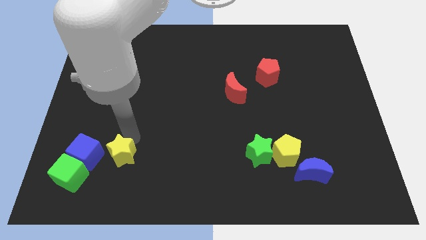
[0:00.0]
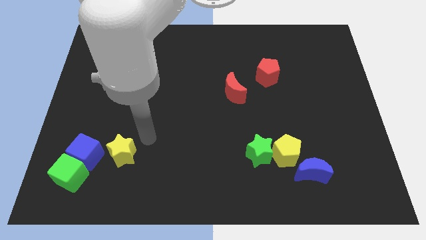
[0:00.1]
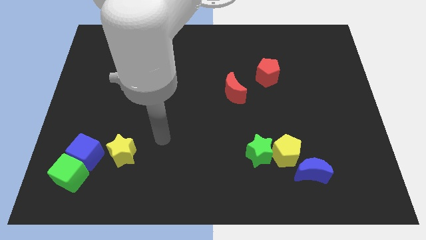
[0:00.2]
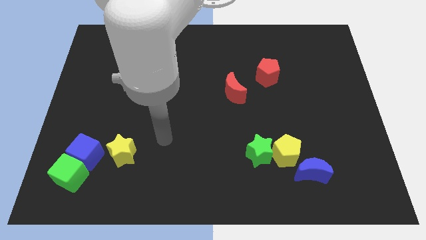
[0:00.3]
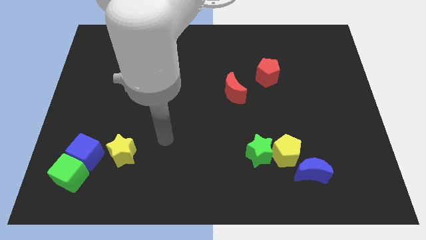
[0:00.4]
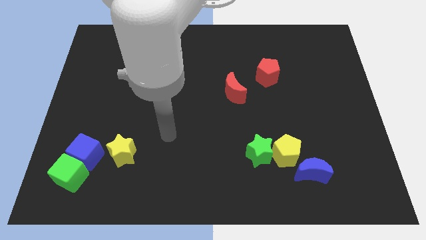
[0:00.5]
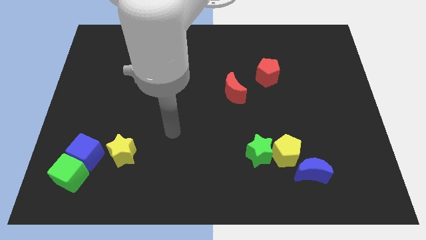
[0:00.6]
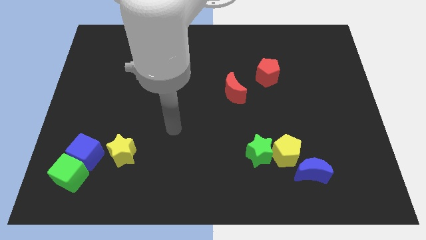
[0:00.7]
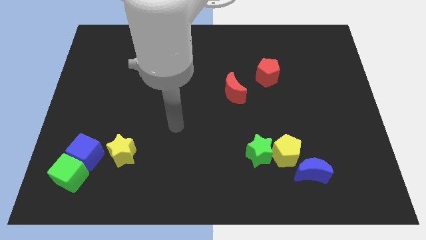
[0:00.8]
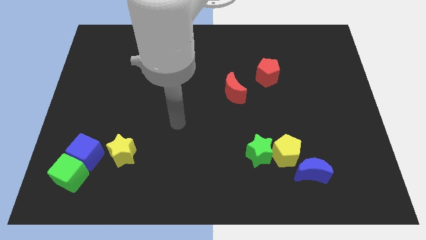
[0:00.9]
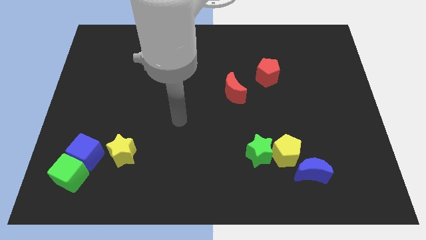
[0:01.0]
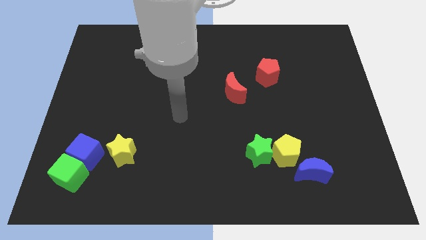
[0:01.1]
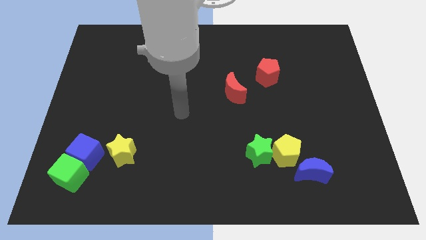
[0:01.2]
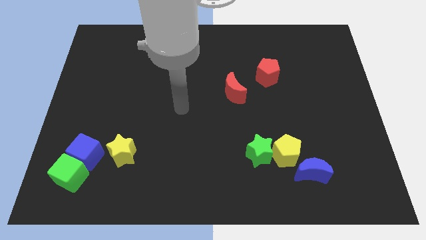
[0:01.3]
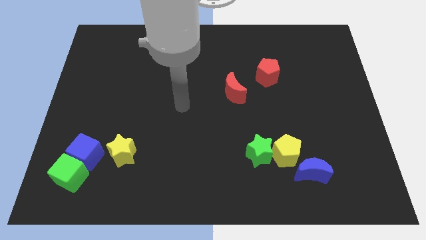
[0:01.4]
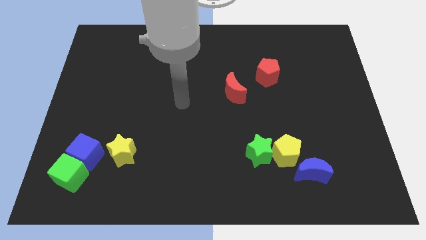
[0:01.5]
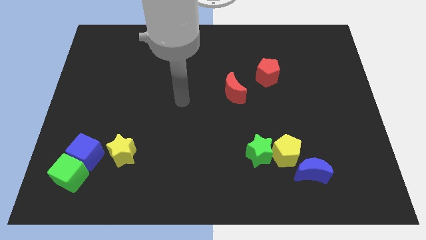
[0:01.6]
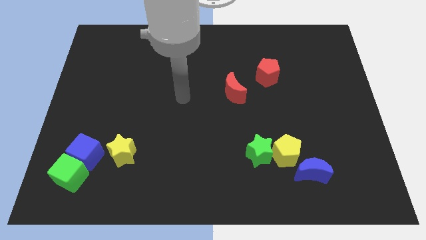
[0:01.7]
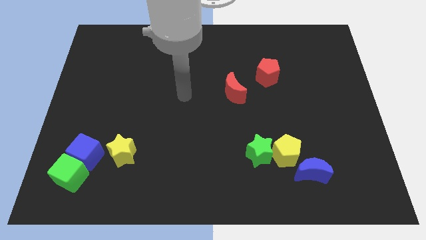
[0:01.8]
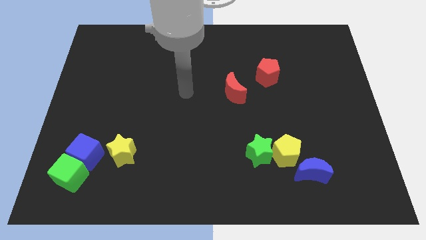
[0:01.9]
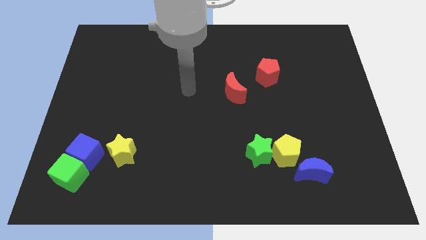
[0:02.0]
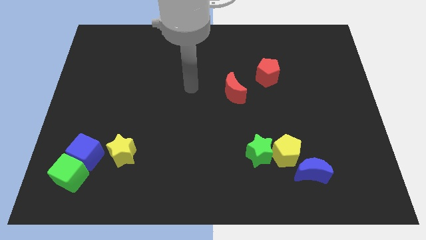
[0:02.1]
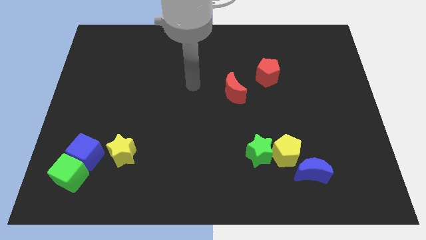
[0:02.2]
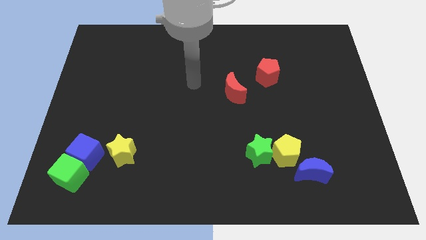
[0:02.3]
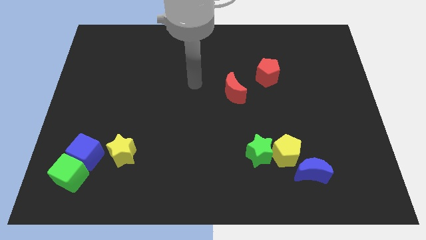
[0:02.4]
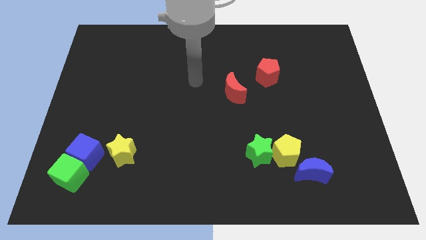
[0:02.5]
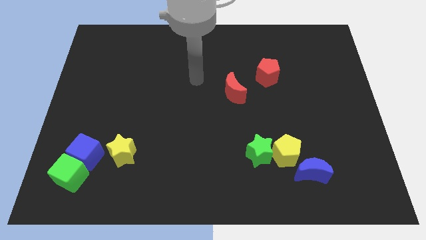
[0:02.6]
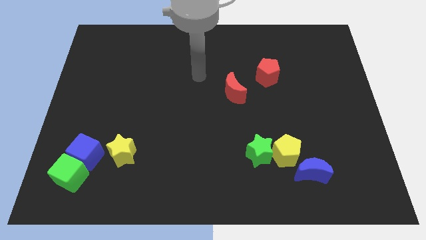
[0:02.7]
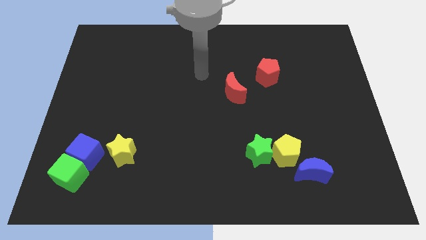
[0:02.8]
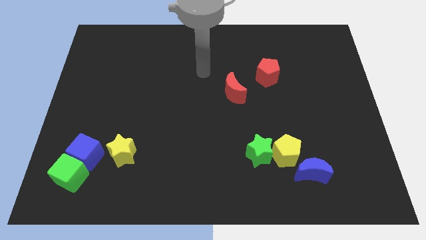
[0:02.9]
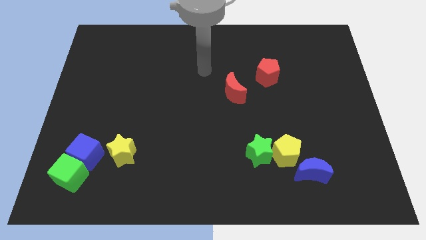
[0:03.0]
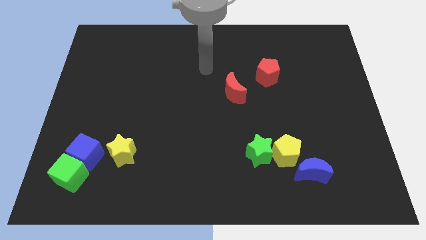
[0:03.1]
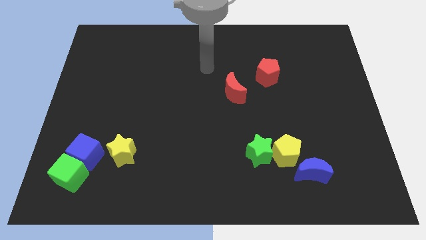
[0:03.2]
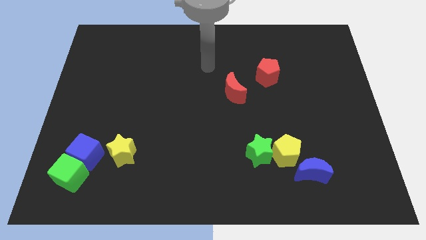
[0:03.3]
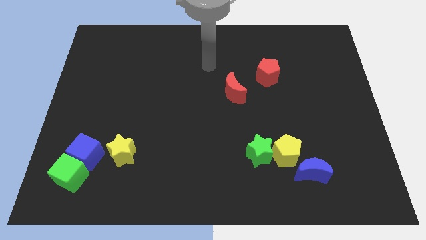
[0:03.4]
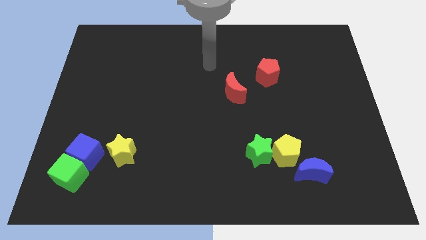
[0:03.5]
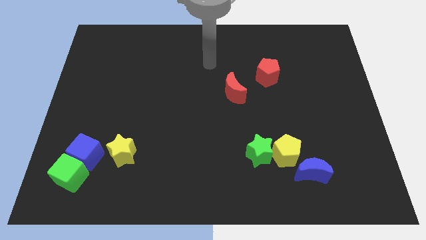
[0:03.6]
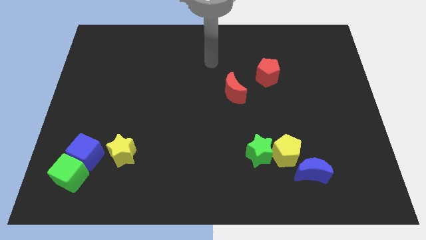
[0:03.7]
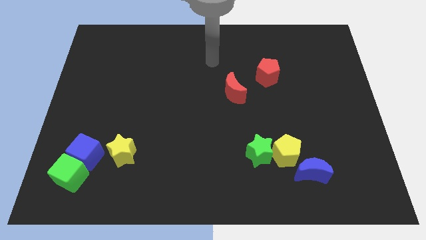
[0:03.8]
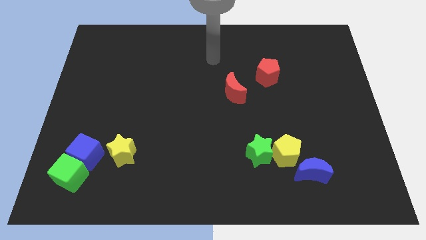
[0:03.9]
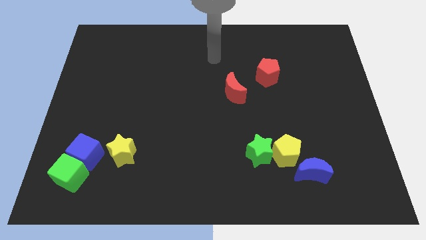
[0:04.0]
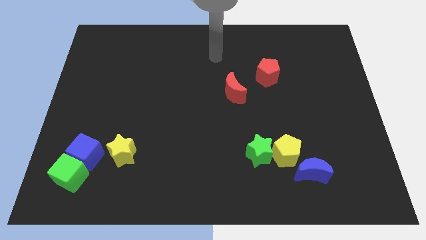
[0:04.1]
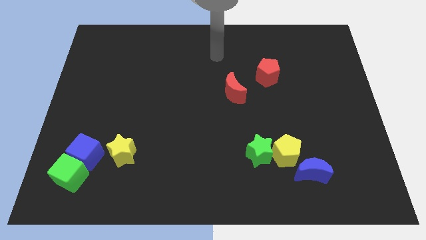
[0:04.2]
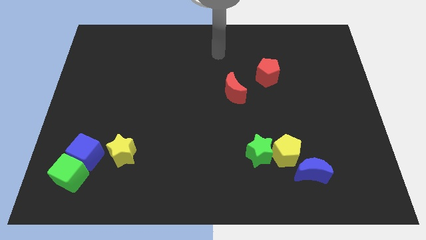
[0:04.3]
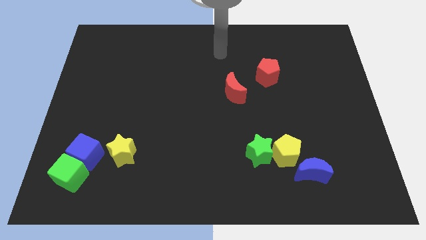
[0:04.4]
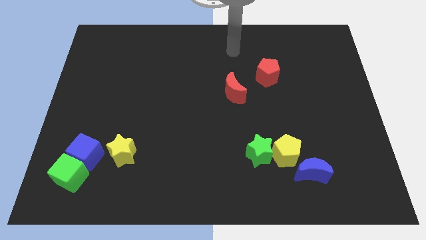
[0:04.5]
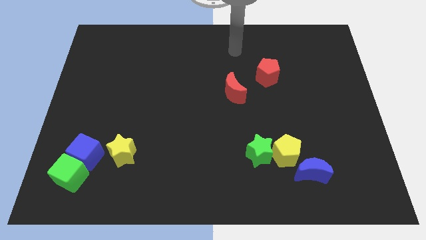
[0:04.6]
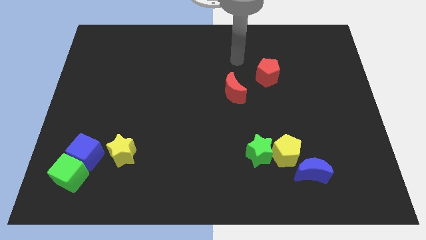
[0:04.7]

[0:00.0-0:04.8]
point your arm at the top of the red crescent

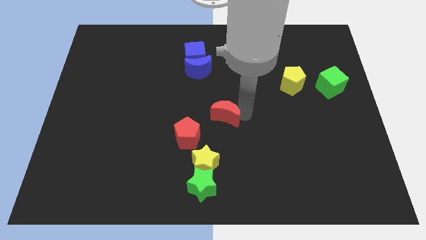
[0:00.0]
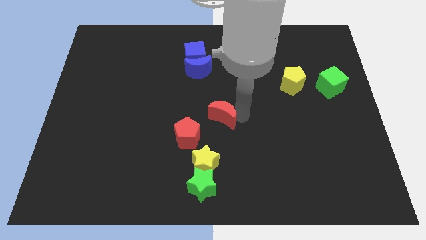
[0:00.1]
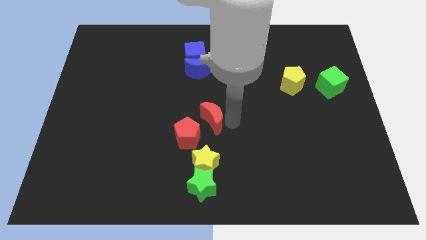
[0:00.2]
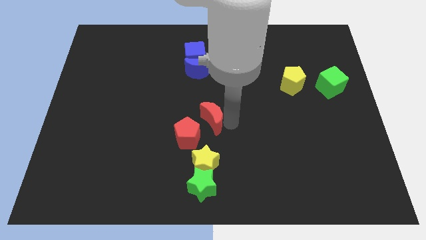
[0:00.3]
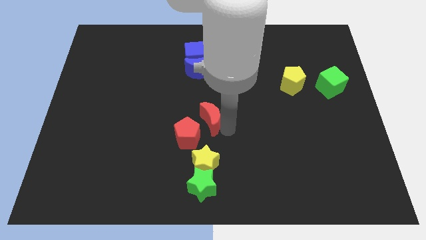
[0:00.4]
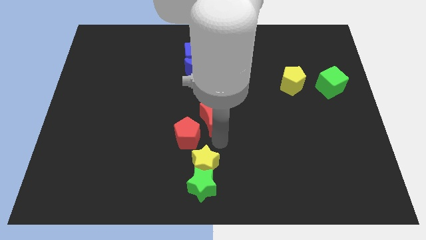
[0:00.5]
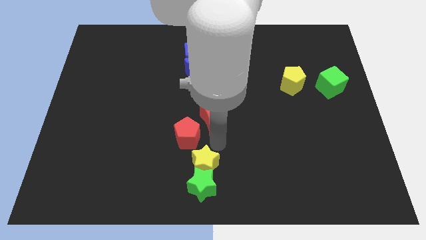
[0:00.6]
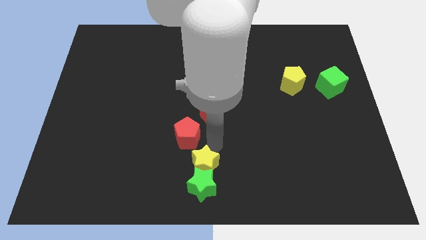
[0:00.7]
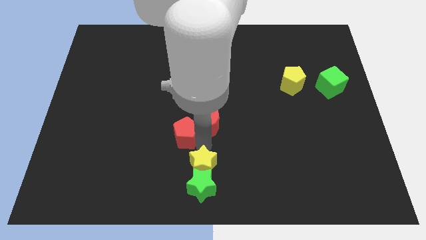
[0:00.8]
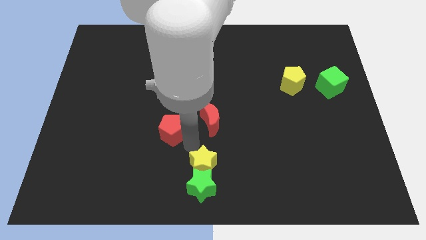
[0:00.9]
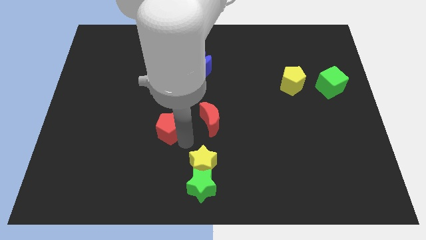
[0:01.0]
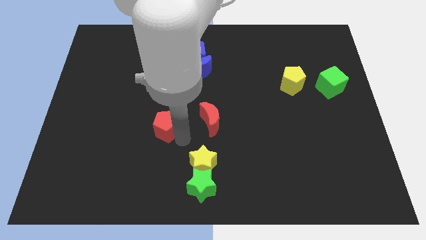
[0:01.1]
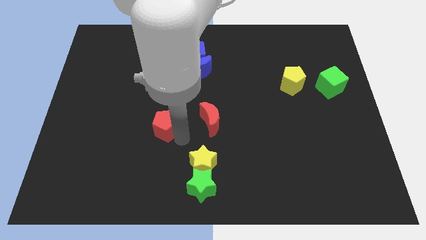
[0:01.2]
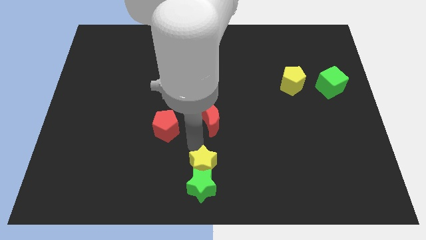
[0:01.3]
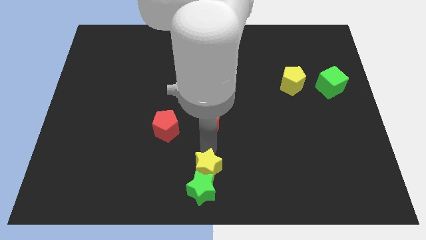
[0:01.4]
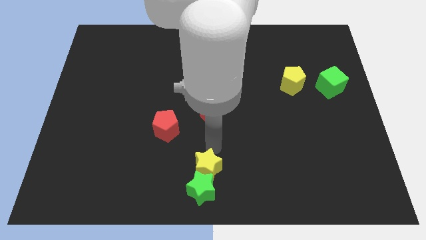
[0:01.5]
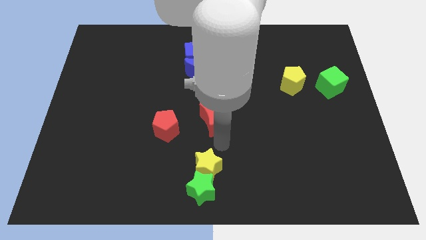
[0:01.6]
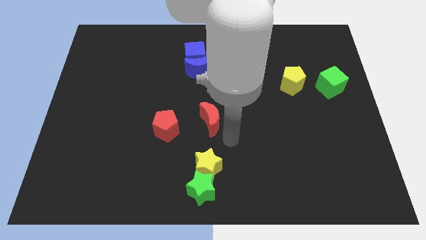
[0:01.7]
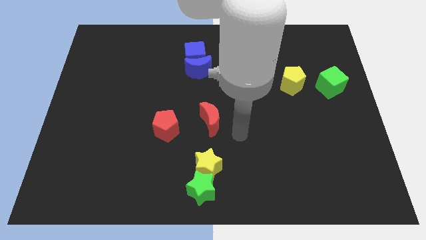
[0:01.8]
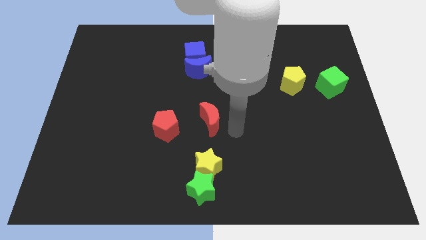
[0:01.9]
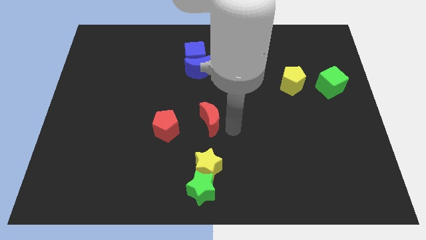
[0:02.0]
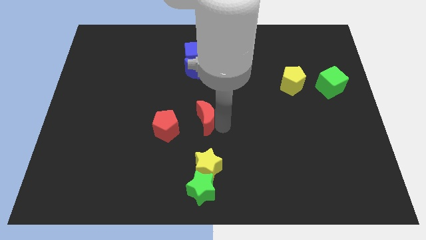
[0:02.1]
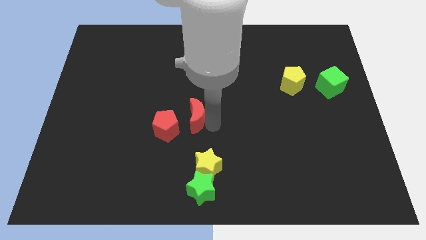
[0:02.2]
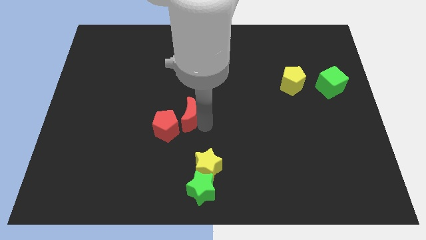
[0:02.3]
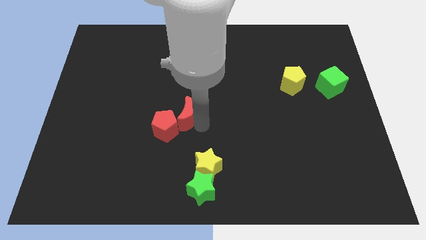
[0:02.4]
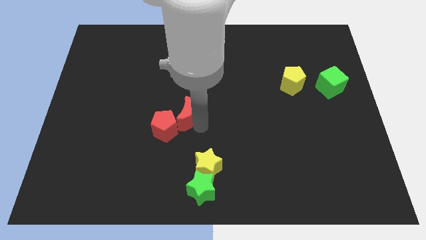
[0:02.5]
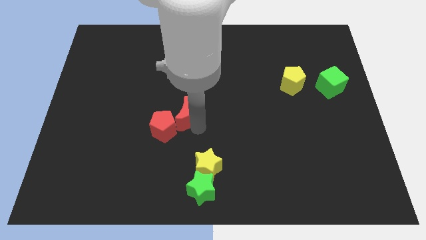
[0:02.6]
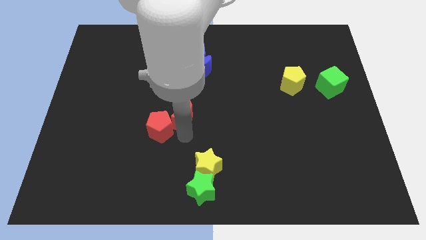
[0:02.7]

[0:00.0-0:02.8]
push red crescent near red pentagon

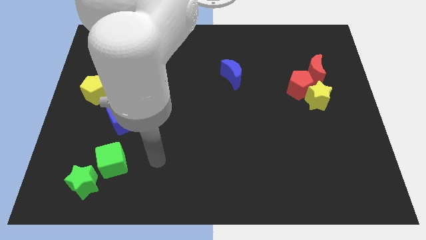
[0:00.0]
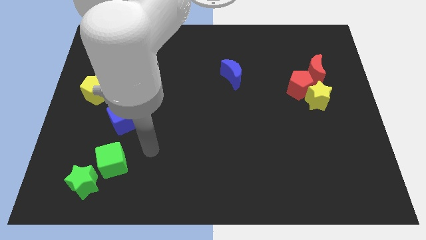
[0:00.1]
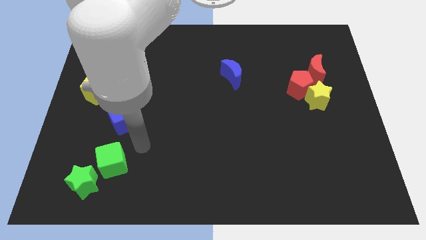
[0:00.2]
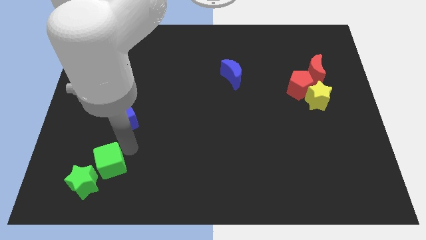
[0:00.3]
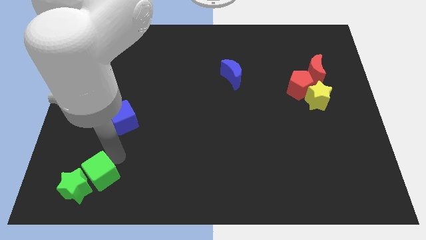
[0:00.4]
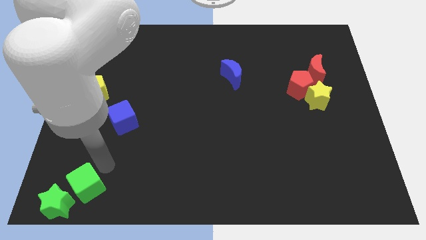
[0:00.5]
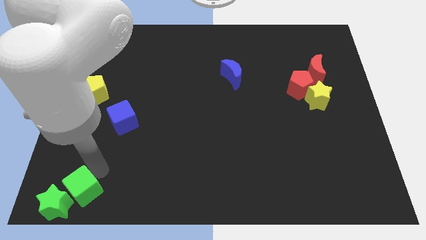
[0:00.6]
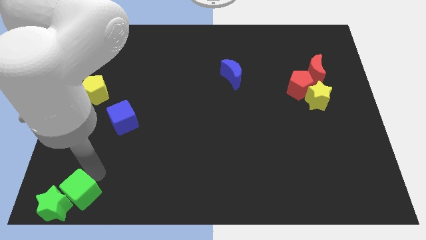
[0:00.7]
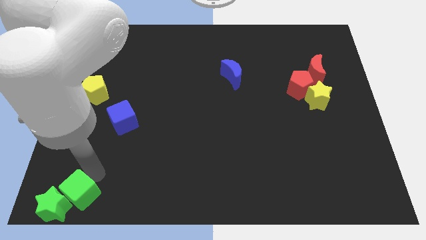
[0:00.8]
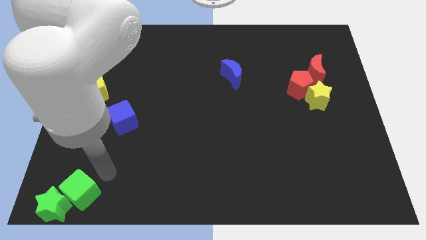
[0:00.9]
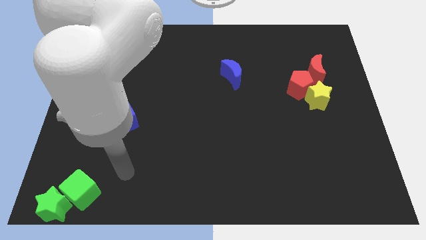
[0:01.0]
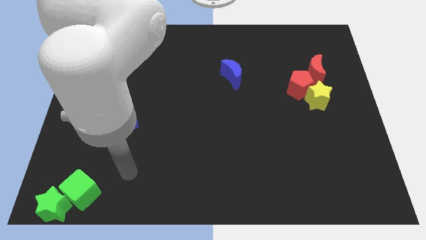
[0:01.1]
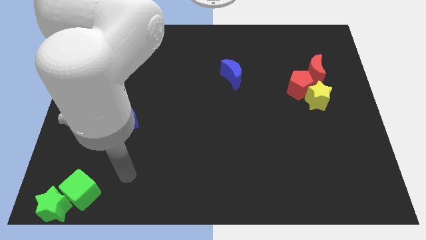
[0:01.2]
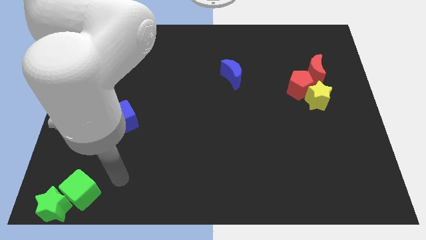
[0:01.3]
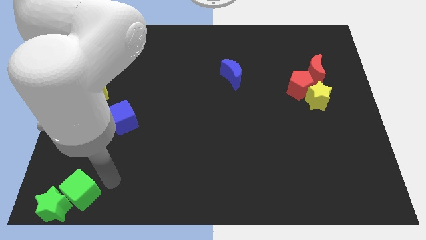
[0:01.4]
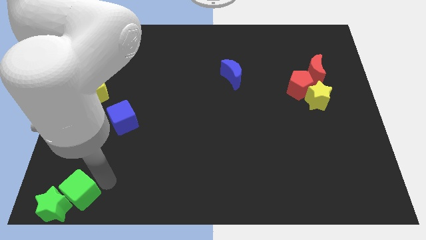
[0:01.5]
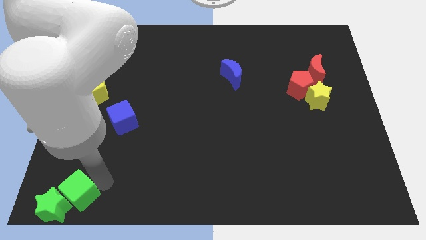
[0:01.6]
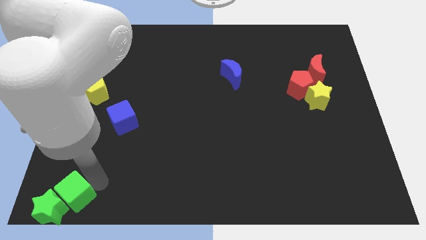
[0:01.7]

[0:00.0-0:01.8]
push green cube to the bottom of the yellow pentagon
